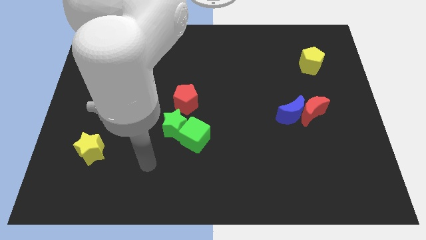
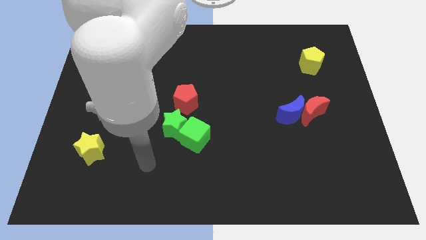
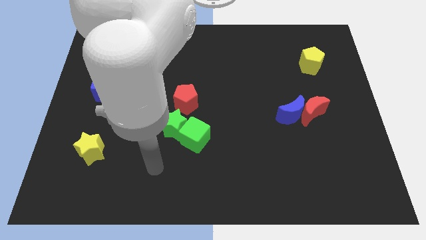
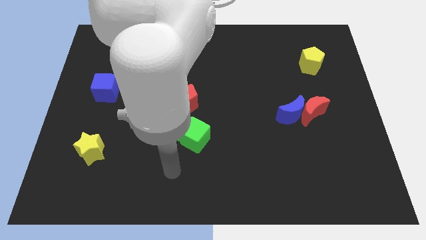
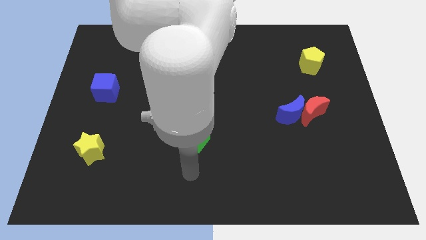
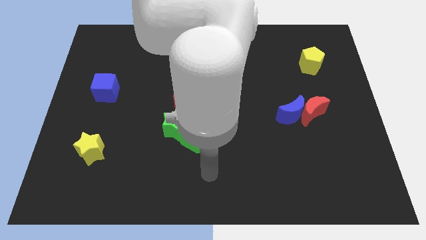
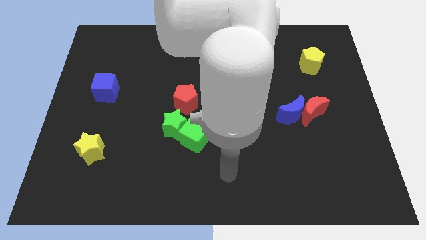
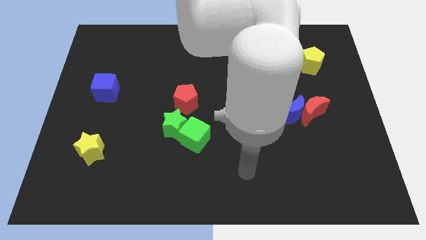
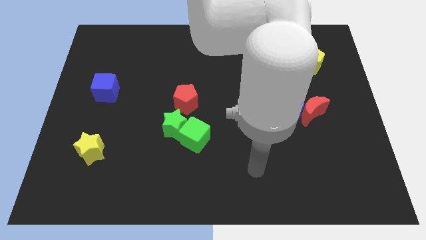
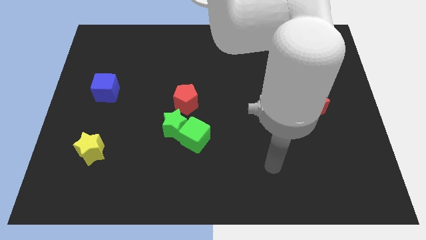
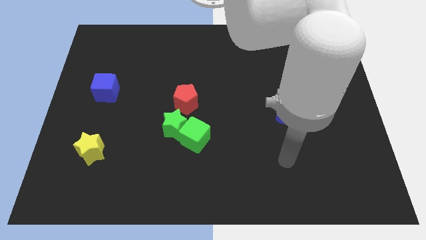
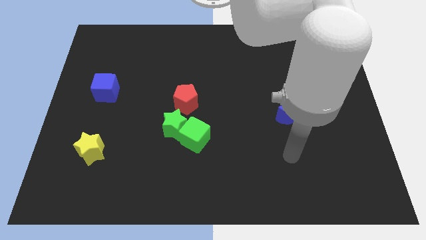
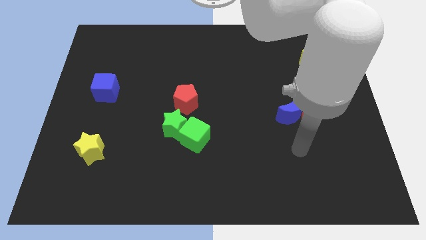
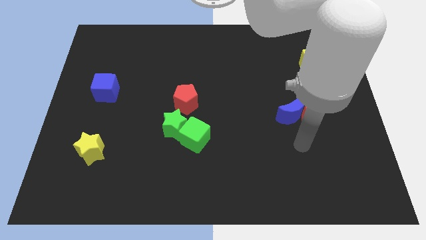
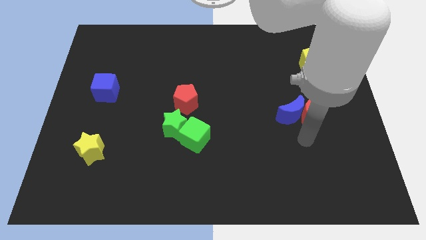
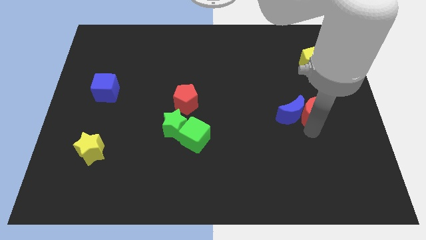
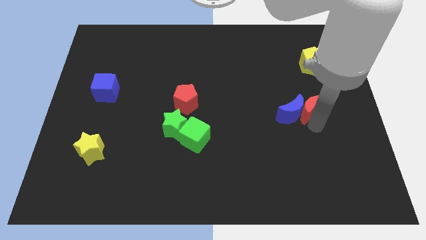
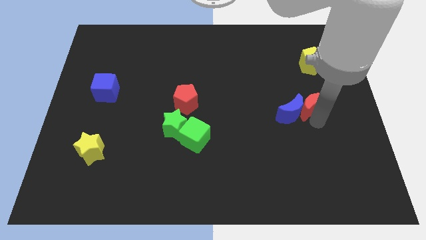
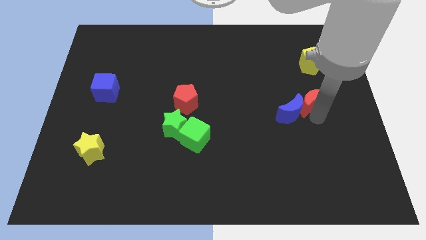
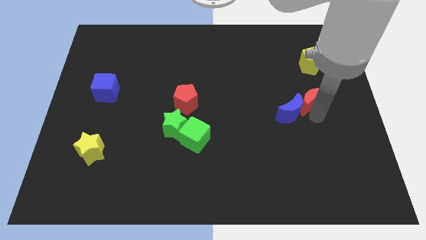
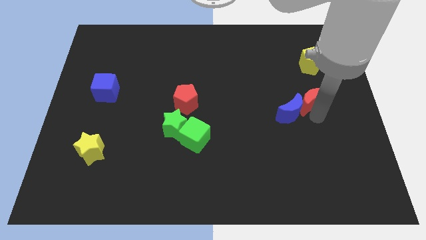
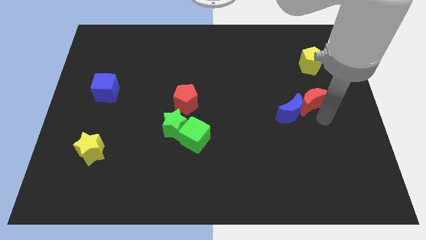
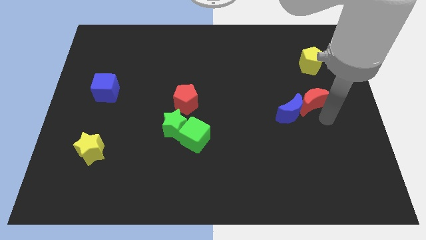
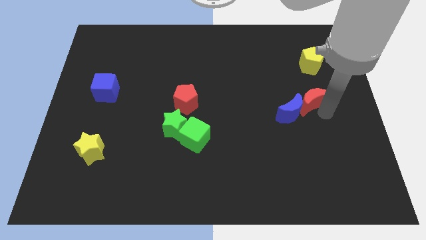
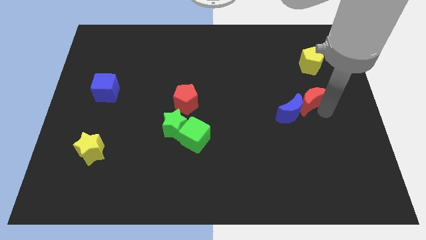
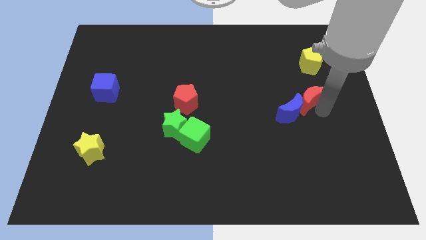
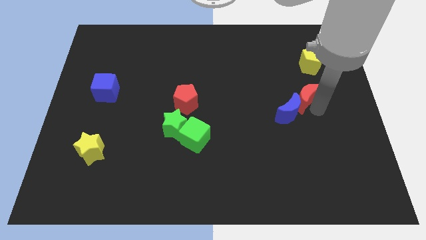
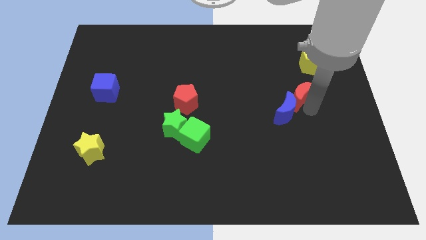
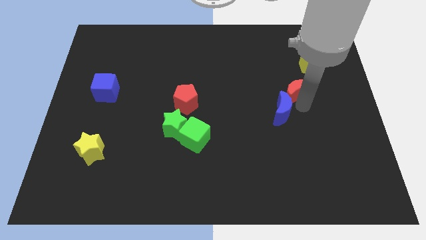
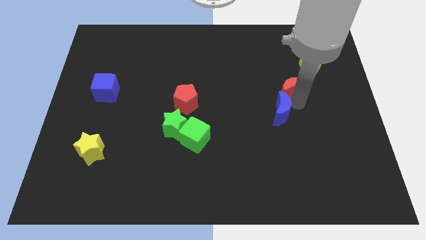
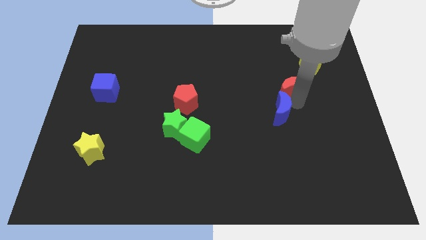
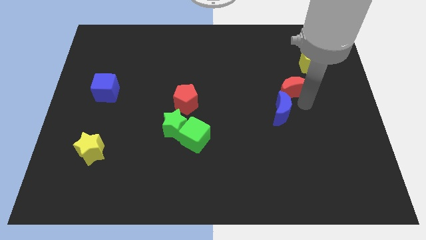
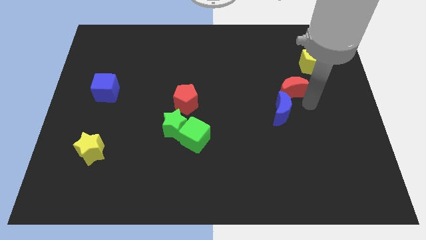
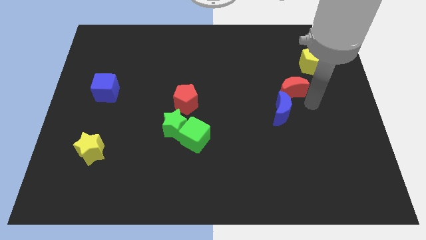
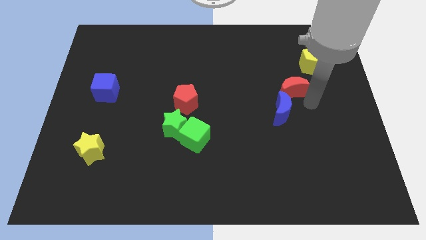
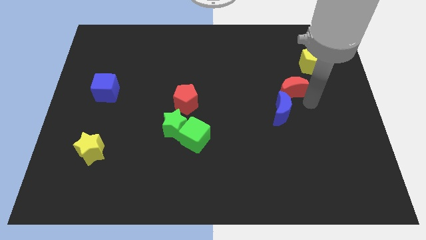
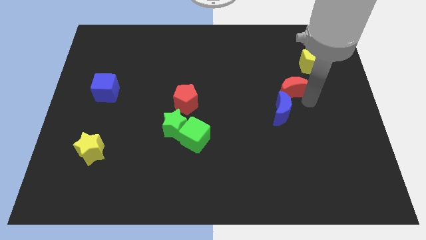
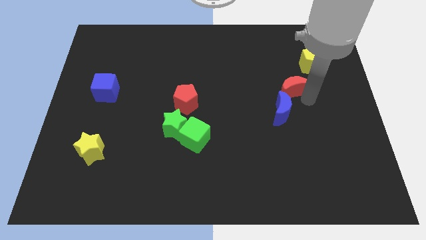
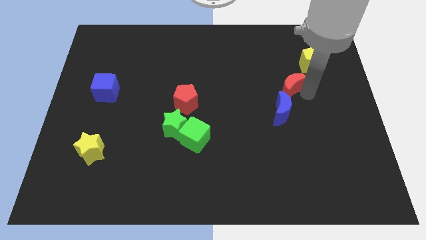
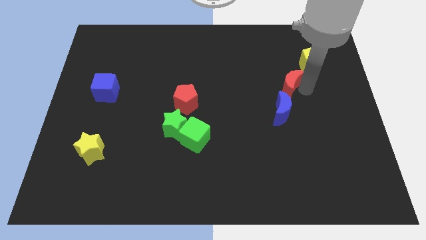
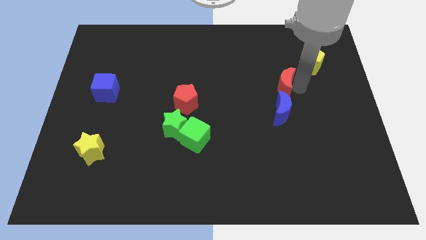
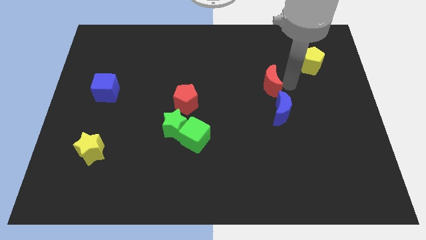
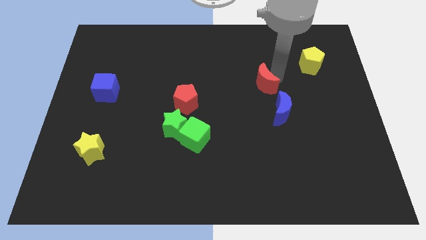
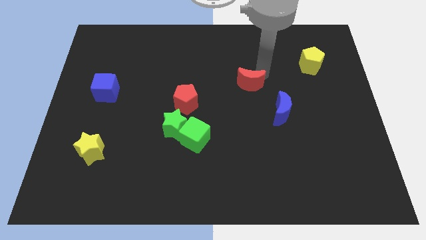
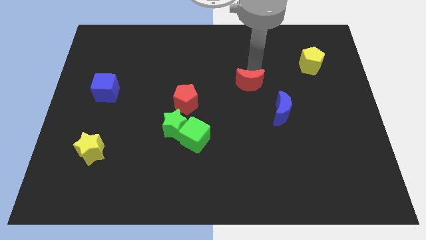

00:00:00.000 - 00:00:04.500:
move the red crescent away from the blue crescent

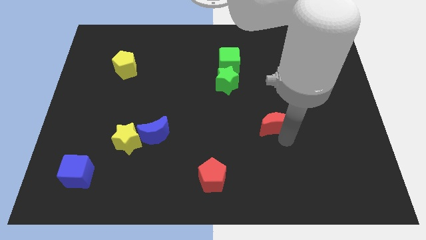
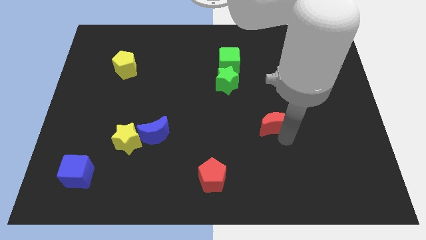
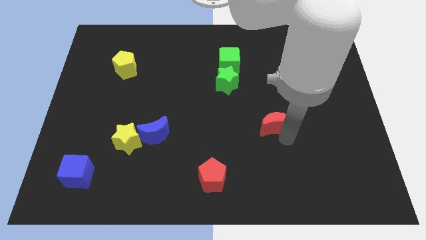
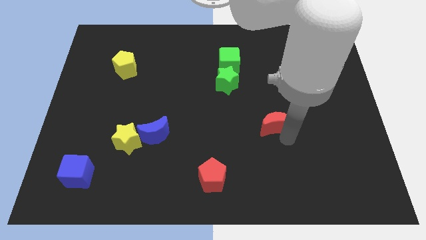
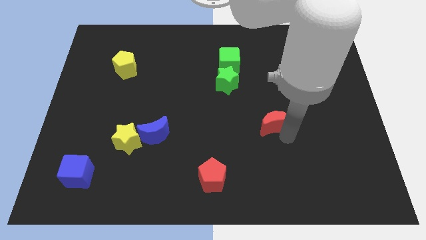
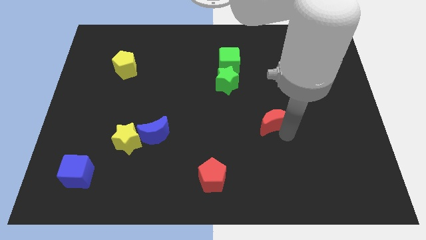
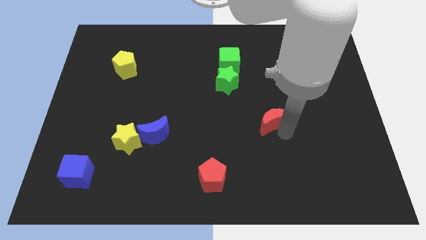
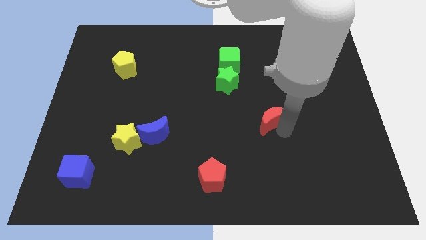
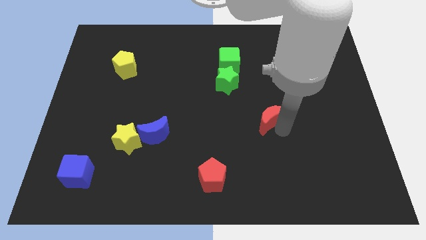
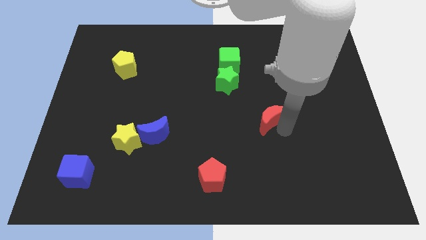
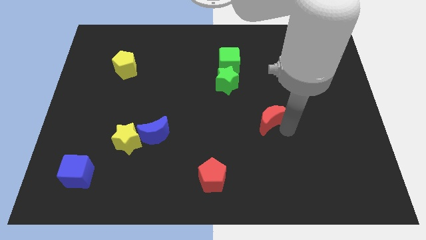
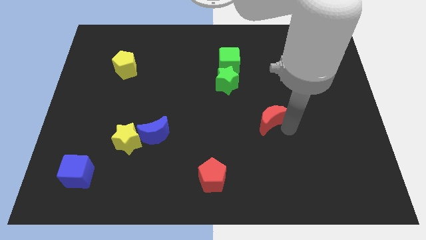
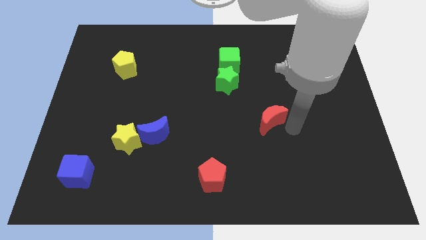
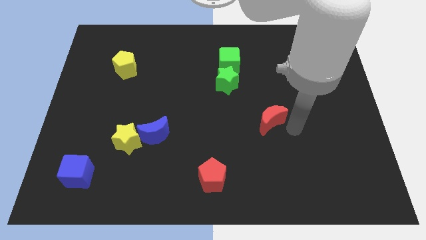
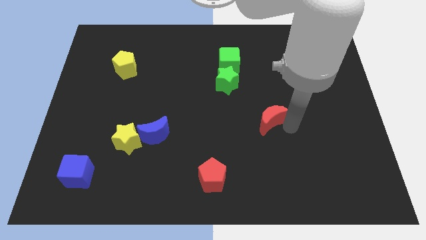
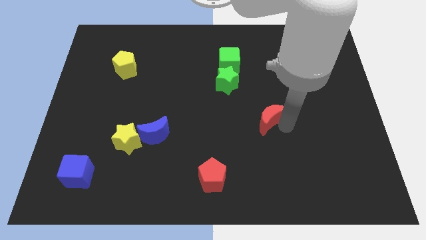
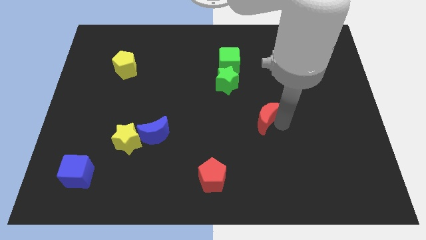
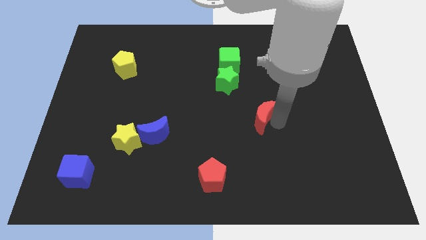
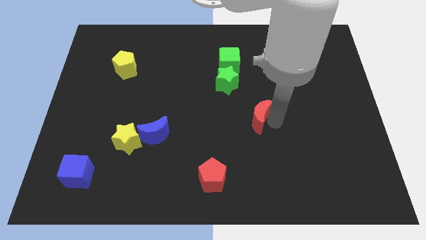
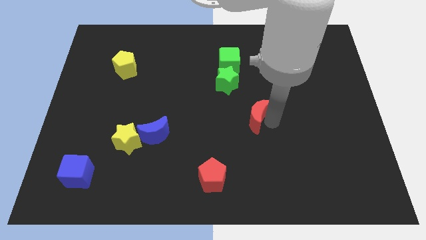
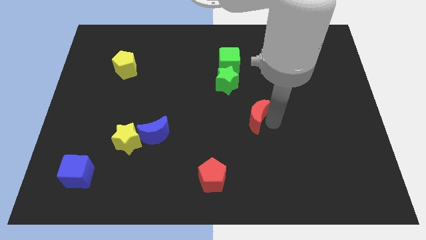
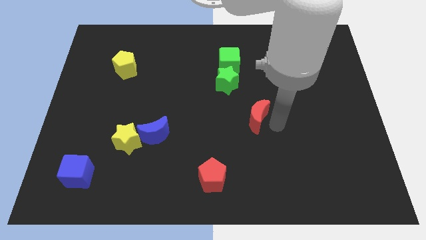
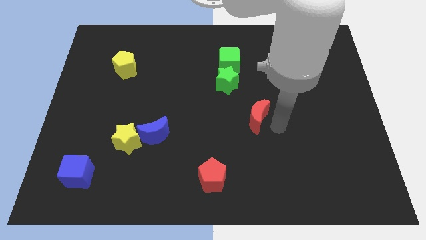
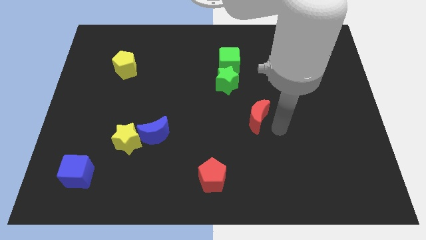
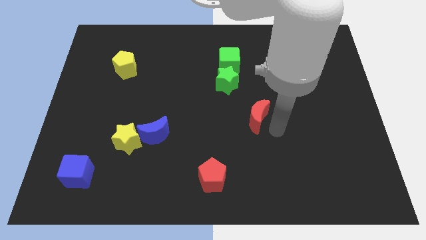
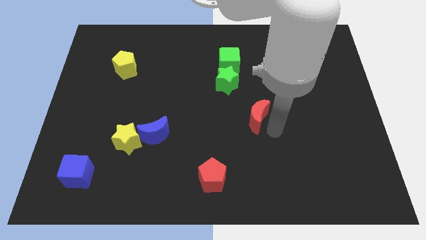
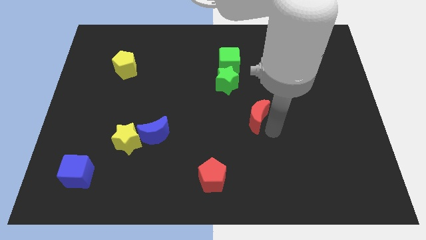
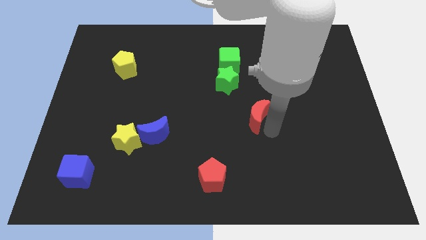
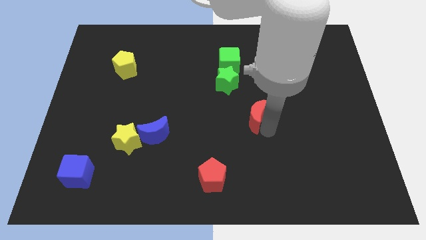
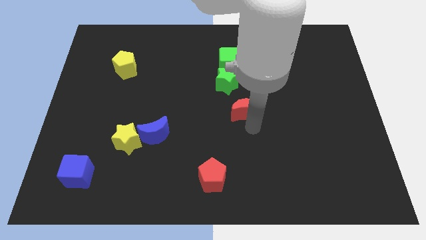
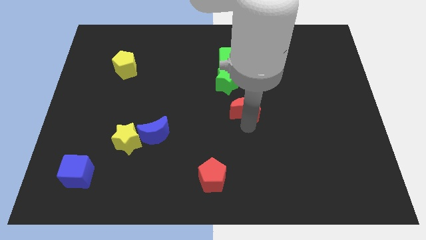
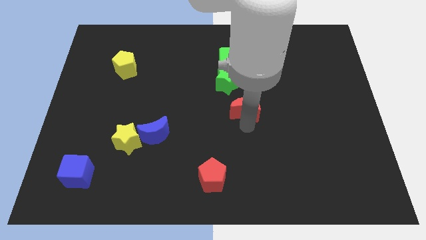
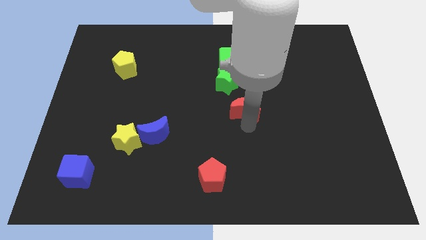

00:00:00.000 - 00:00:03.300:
move the red crescent towards the green star

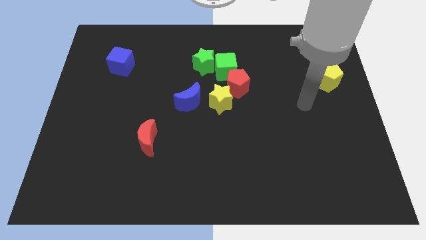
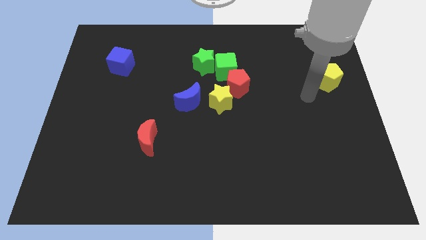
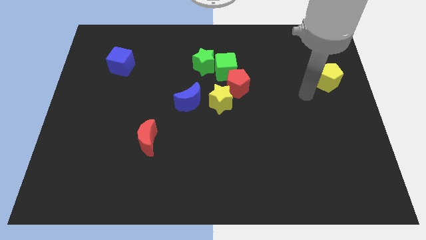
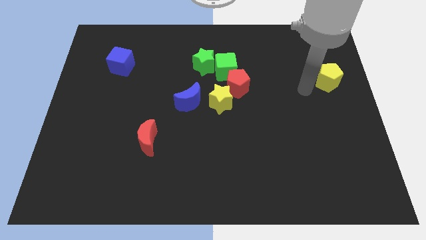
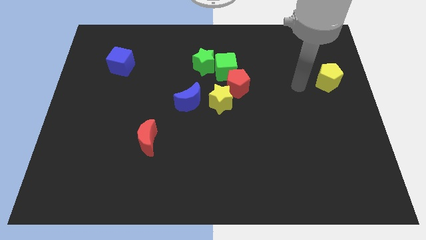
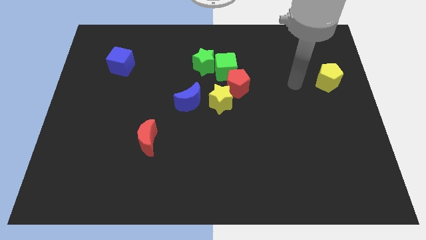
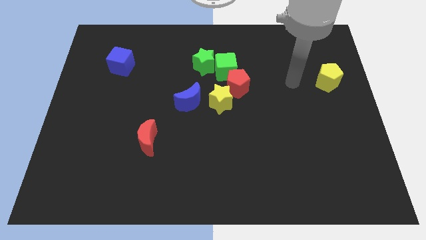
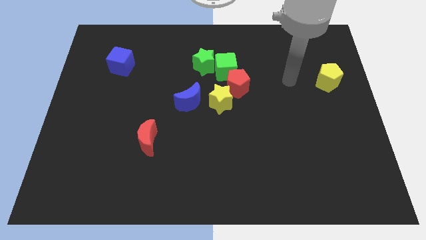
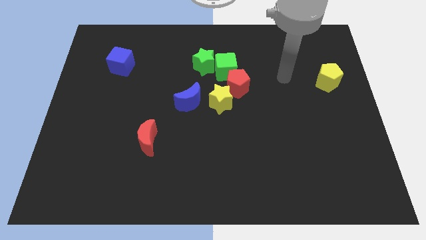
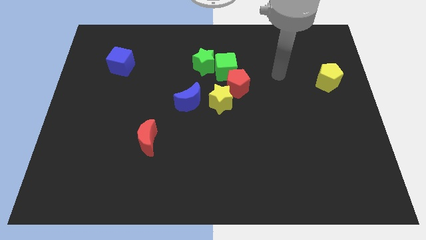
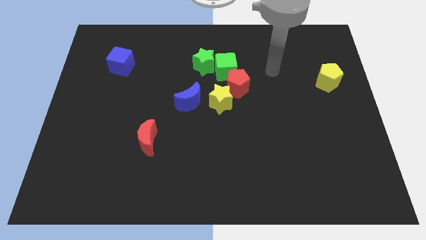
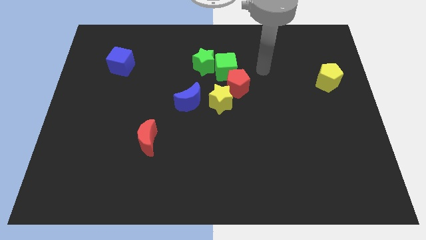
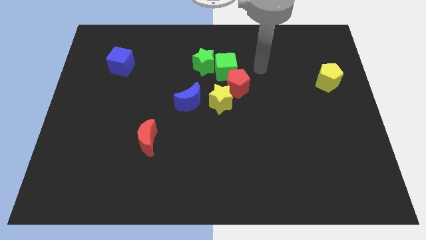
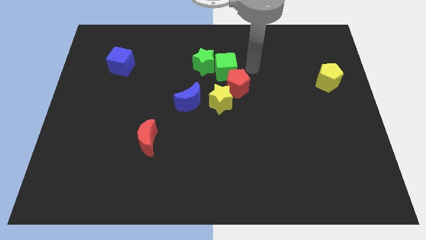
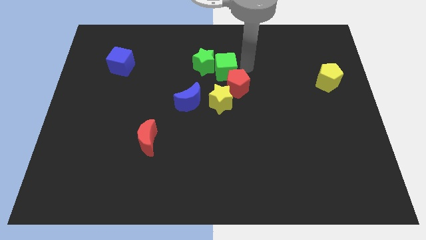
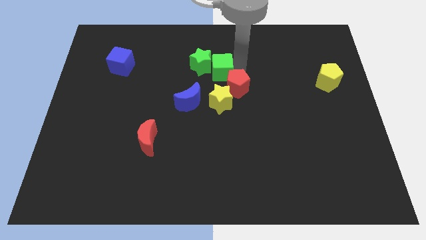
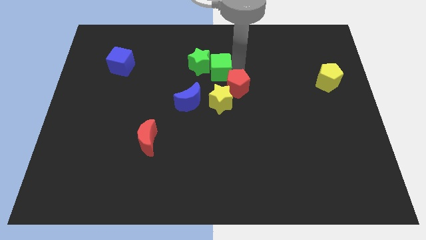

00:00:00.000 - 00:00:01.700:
push green cube towards green star
